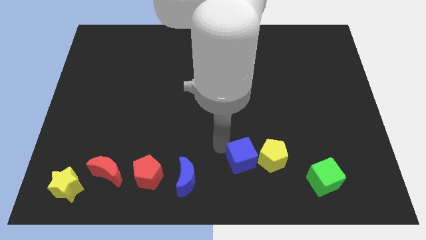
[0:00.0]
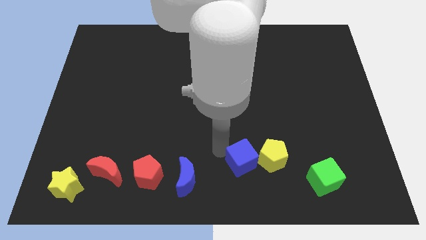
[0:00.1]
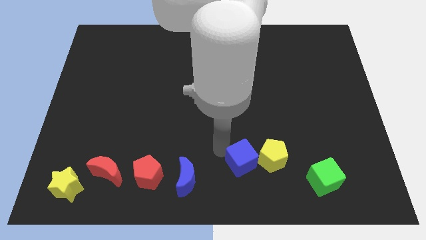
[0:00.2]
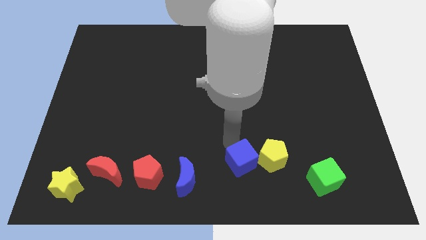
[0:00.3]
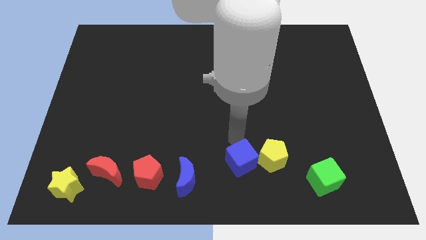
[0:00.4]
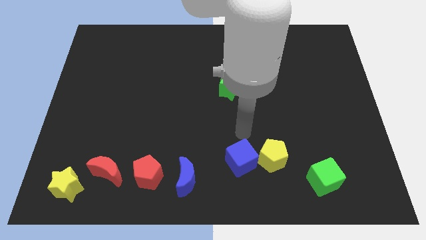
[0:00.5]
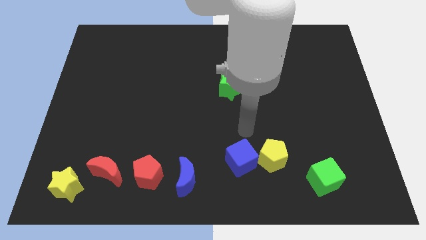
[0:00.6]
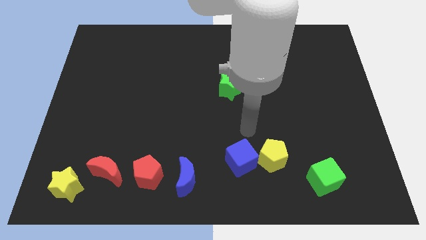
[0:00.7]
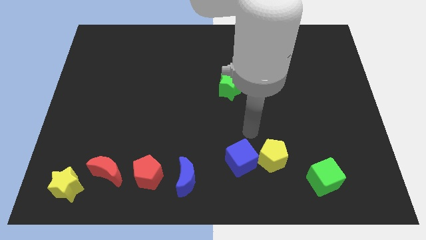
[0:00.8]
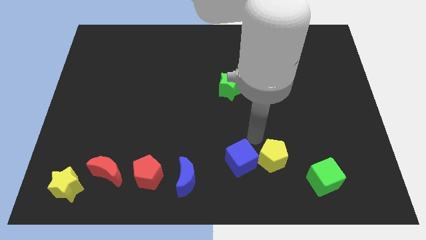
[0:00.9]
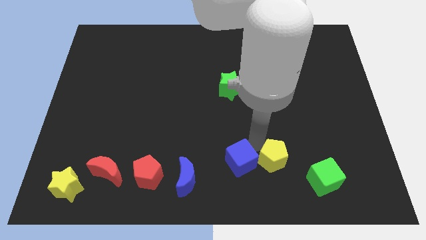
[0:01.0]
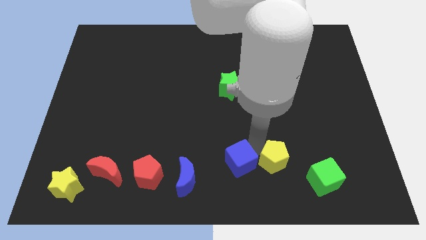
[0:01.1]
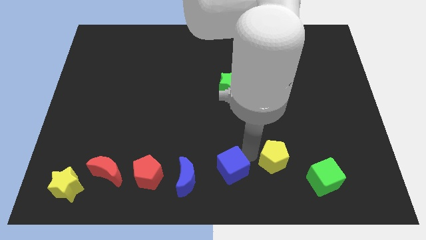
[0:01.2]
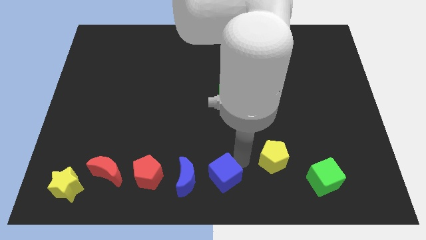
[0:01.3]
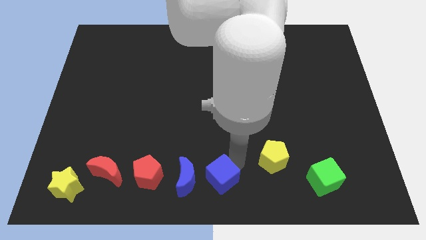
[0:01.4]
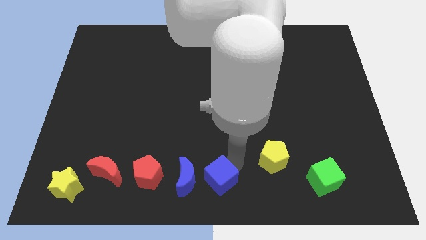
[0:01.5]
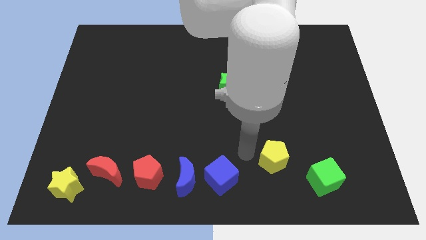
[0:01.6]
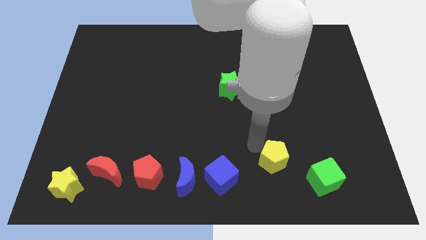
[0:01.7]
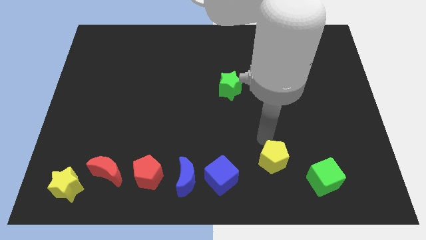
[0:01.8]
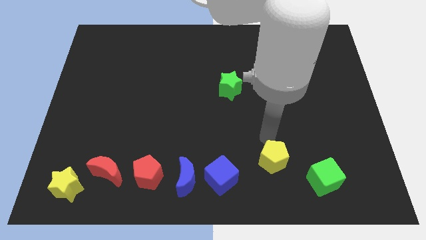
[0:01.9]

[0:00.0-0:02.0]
separate the blue cube from the yellow pentagon

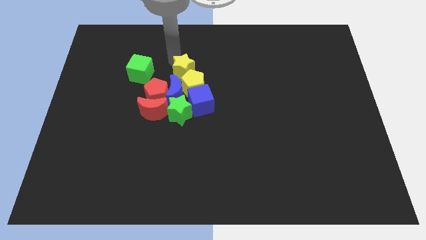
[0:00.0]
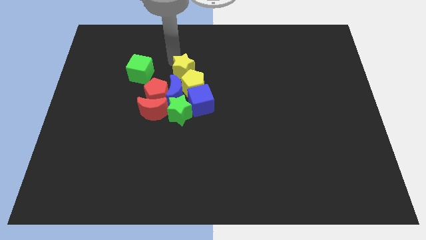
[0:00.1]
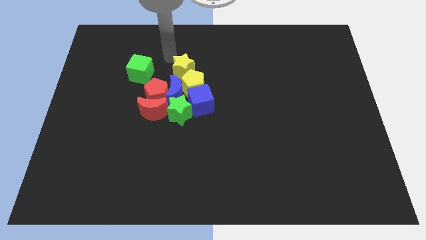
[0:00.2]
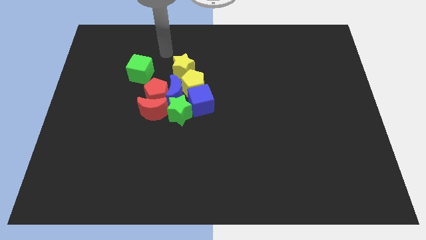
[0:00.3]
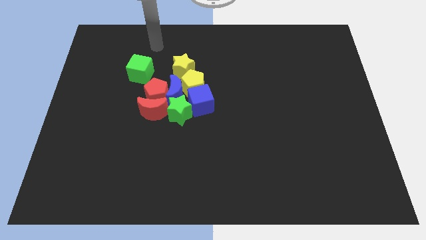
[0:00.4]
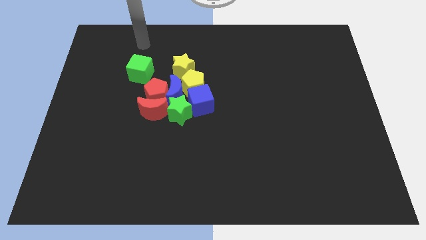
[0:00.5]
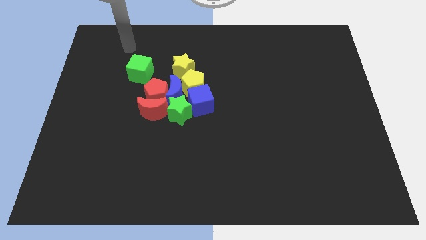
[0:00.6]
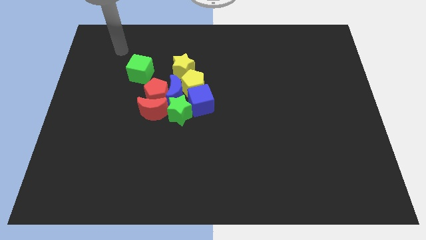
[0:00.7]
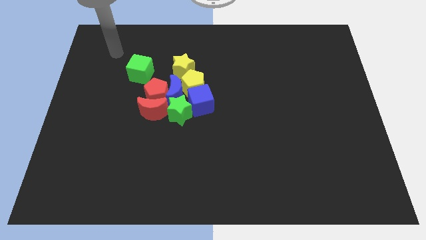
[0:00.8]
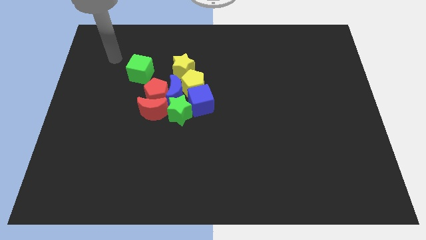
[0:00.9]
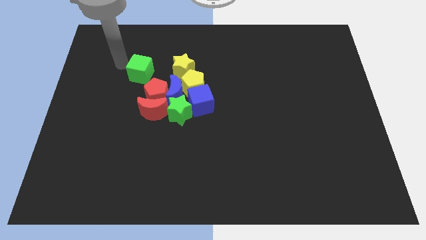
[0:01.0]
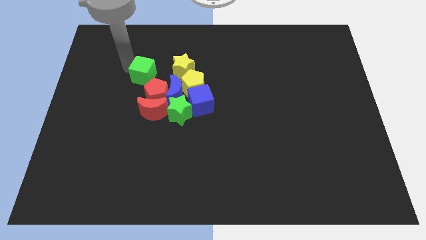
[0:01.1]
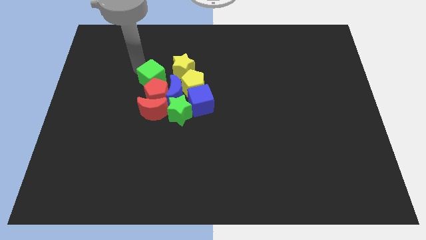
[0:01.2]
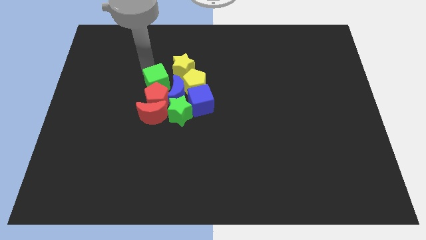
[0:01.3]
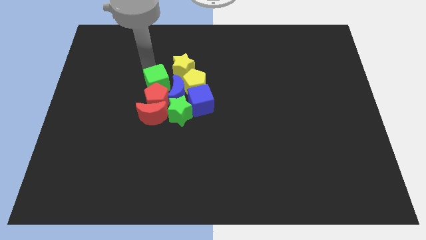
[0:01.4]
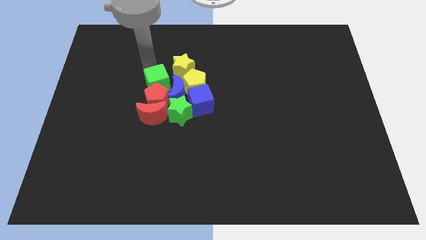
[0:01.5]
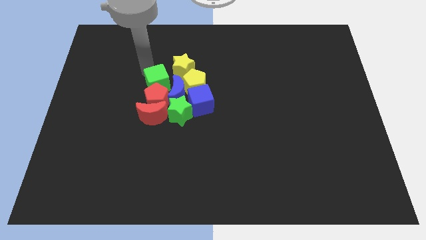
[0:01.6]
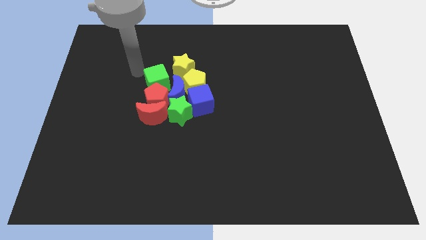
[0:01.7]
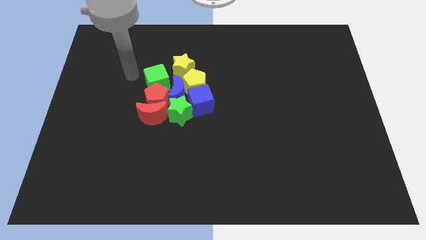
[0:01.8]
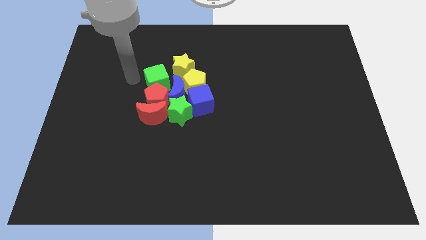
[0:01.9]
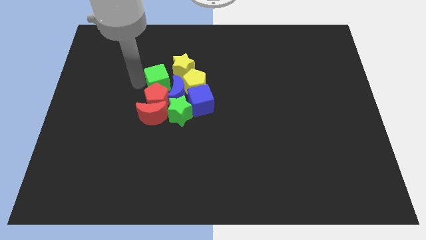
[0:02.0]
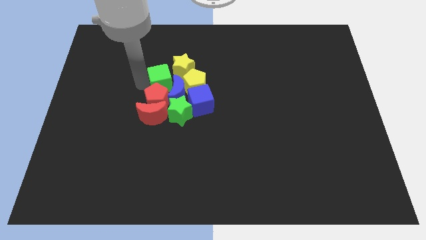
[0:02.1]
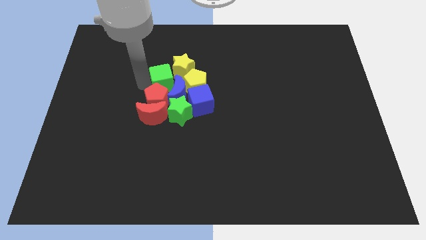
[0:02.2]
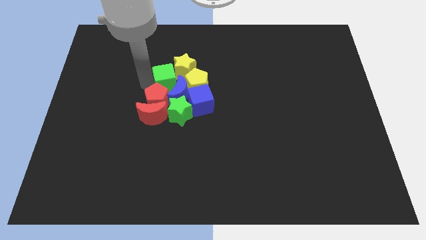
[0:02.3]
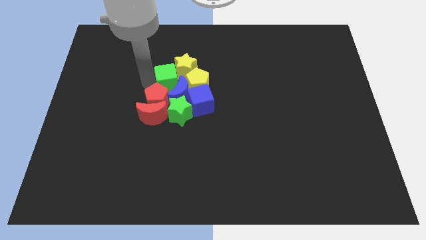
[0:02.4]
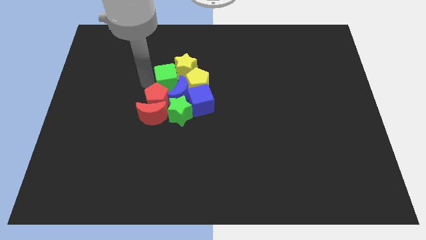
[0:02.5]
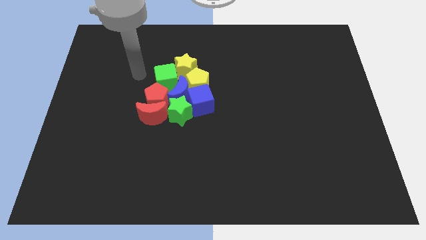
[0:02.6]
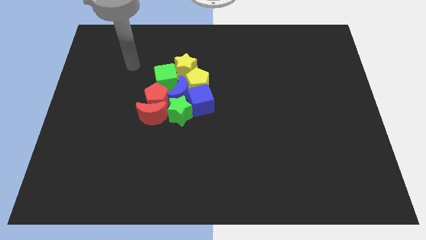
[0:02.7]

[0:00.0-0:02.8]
push the green cube into the group of blocks

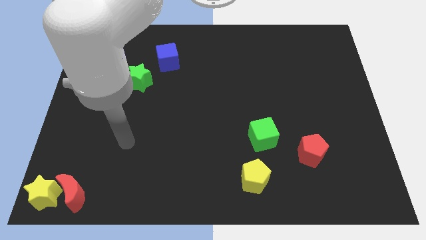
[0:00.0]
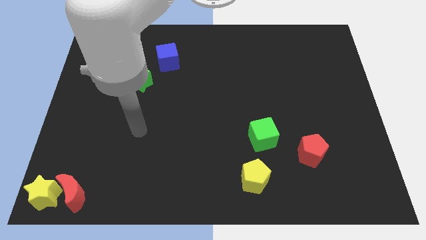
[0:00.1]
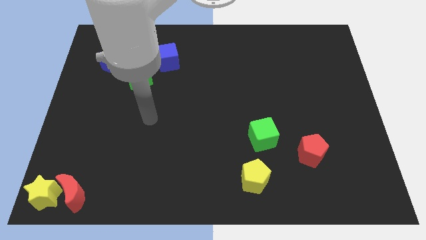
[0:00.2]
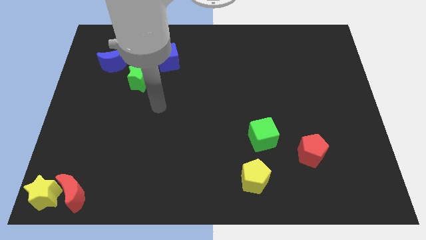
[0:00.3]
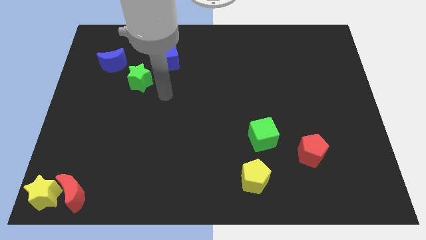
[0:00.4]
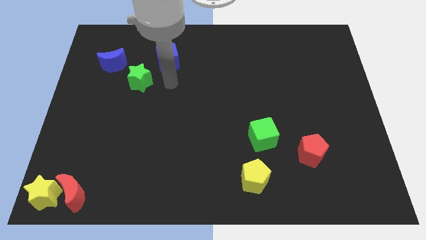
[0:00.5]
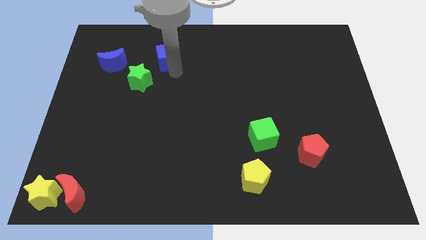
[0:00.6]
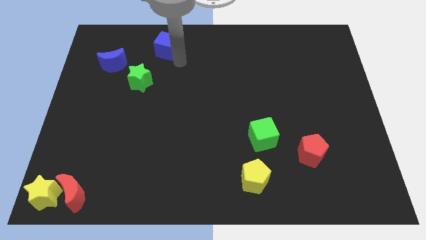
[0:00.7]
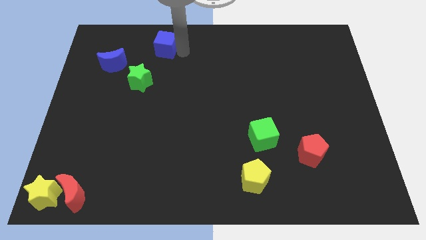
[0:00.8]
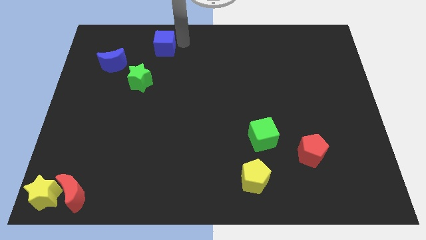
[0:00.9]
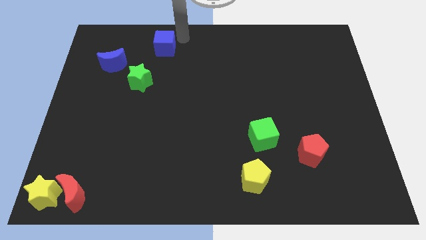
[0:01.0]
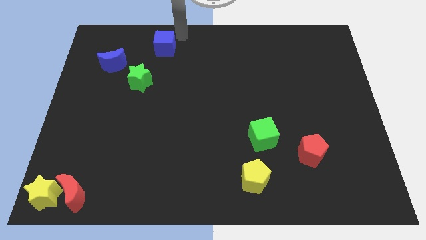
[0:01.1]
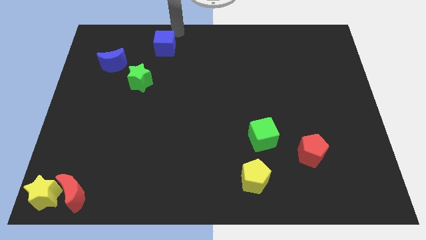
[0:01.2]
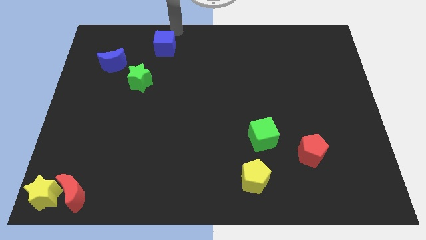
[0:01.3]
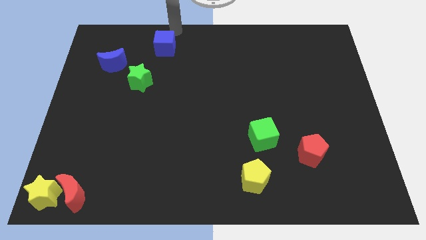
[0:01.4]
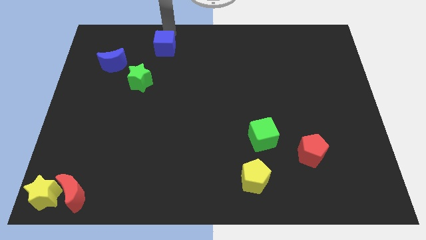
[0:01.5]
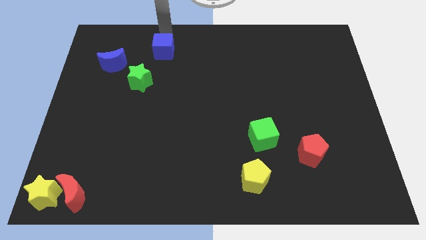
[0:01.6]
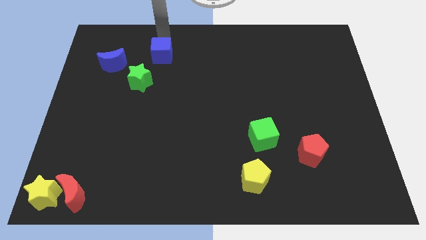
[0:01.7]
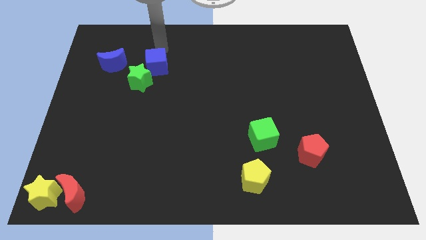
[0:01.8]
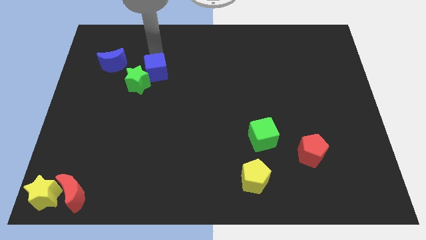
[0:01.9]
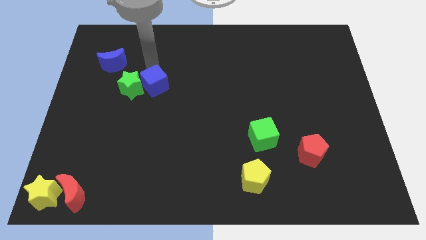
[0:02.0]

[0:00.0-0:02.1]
push the blue cube into the green star

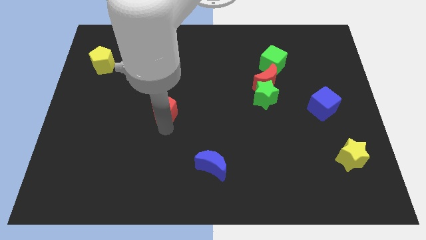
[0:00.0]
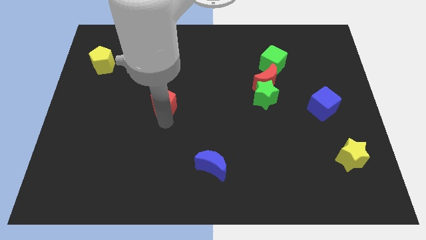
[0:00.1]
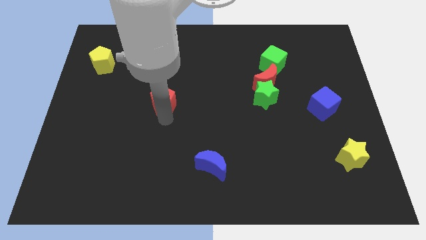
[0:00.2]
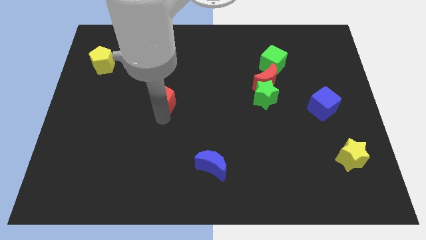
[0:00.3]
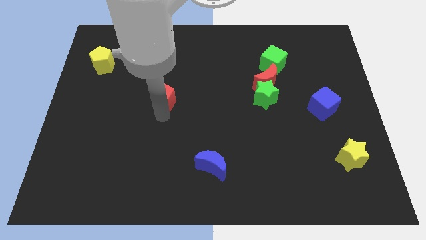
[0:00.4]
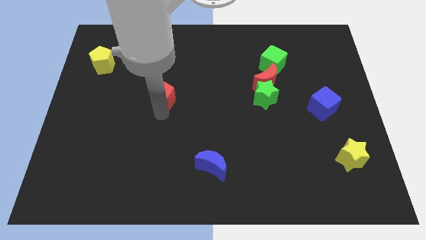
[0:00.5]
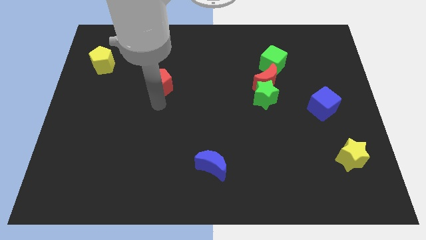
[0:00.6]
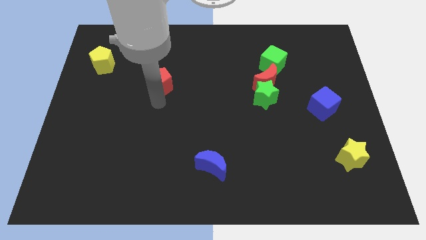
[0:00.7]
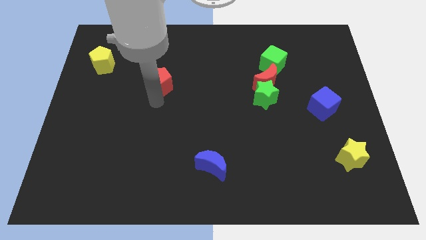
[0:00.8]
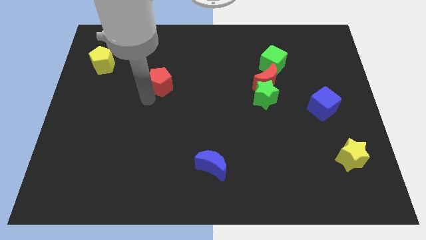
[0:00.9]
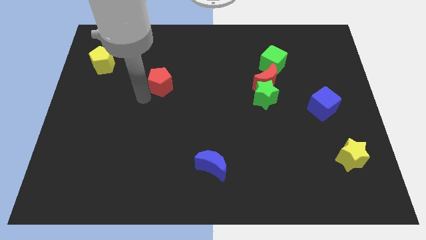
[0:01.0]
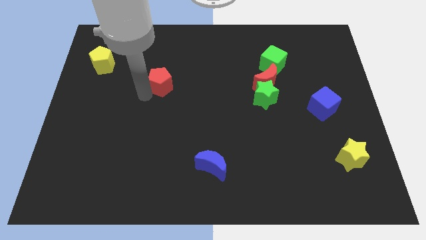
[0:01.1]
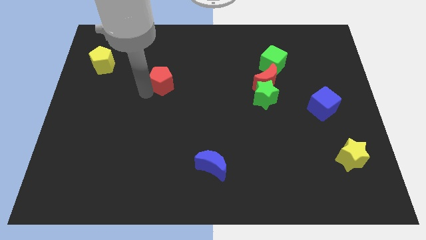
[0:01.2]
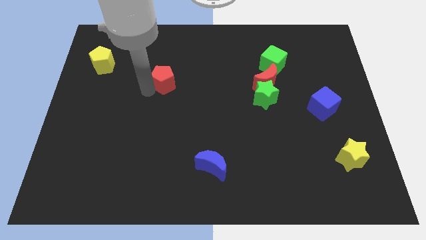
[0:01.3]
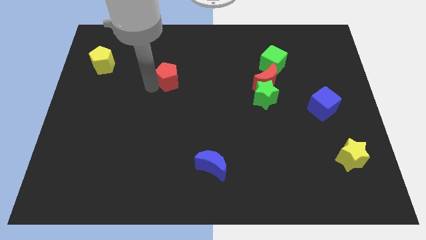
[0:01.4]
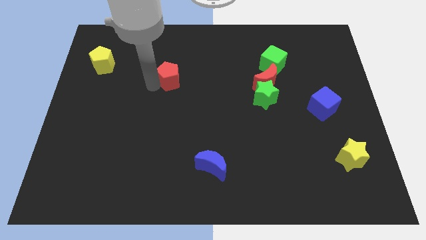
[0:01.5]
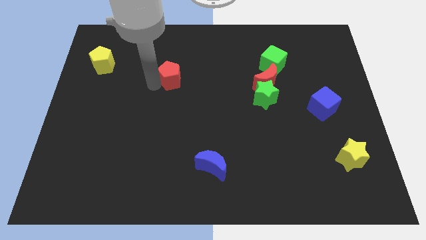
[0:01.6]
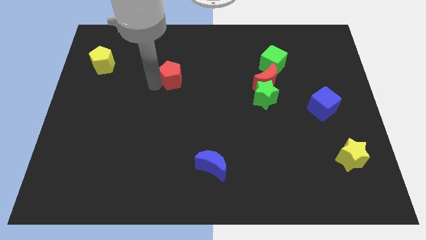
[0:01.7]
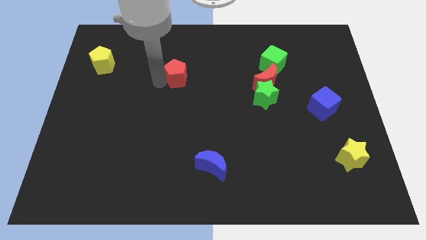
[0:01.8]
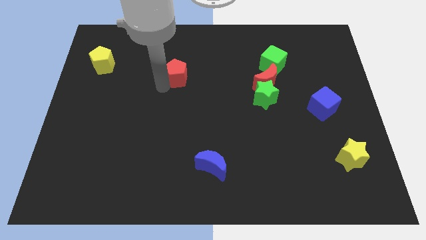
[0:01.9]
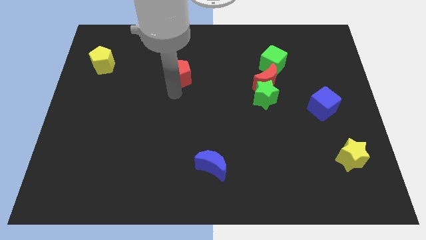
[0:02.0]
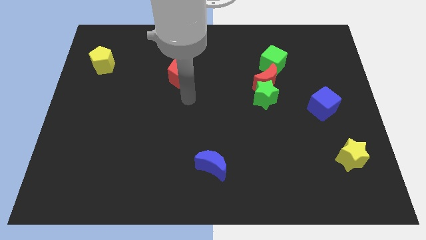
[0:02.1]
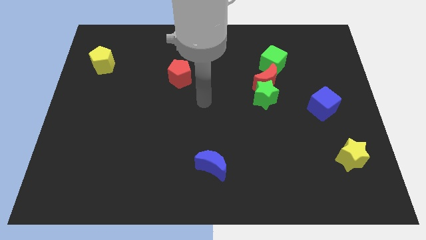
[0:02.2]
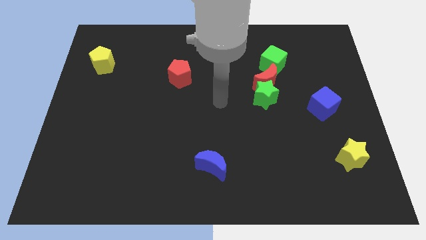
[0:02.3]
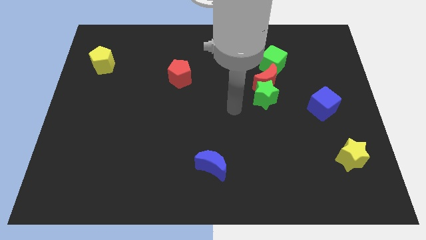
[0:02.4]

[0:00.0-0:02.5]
push the red pentagon to the top side of the board
